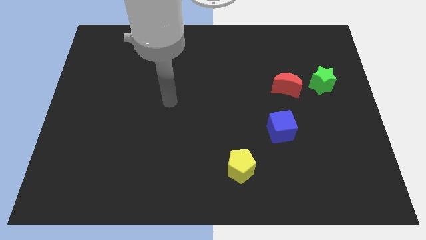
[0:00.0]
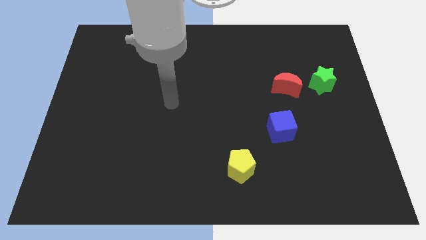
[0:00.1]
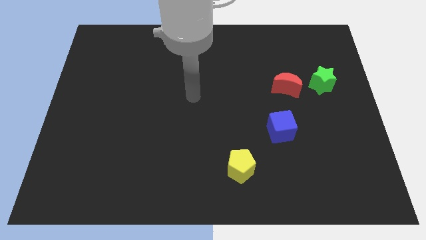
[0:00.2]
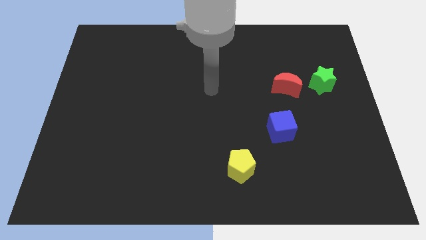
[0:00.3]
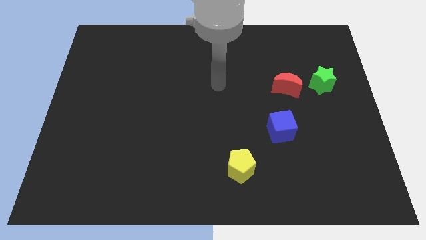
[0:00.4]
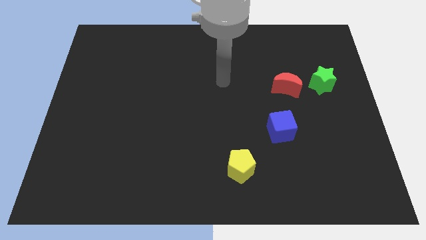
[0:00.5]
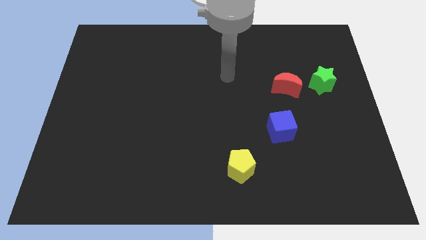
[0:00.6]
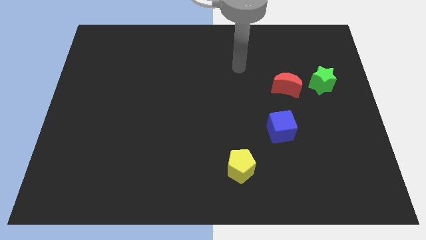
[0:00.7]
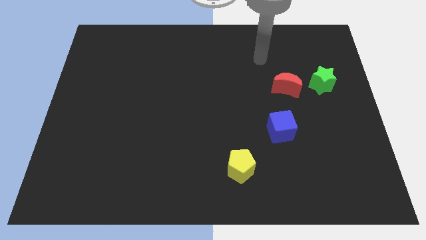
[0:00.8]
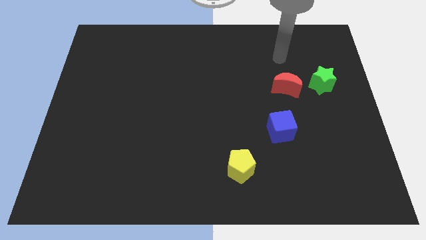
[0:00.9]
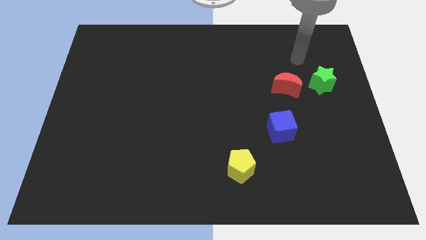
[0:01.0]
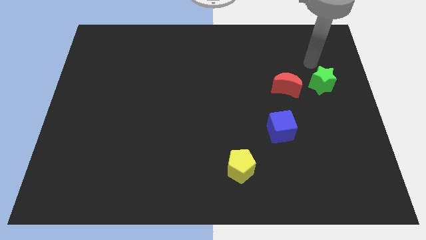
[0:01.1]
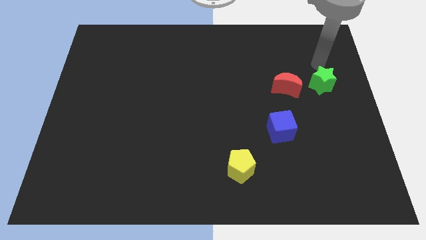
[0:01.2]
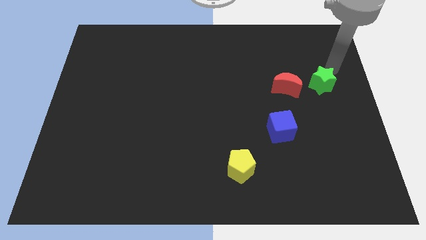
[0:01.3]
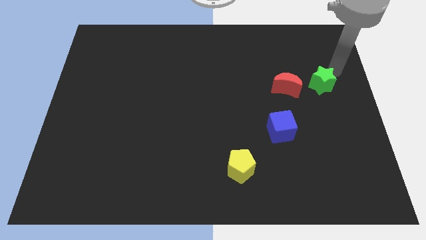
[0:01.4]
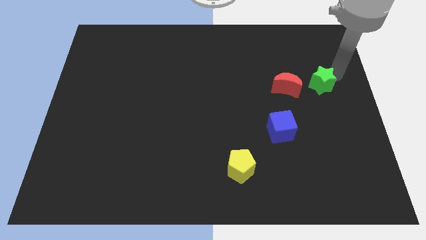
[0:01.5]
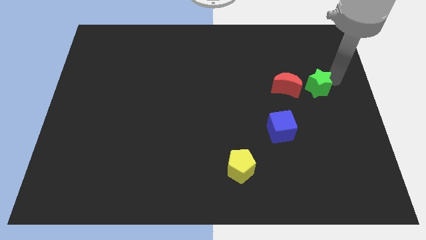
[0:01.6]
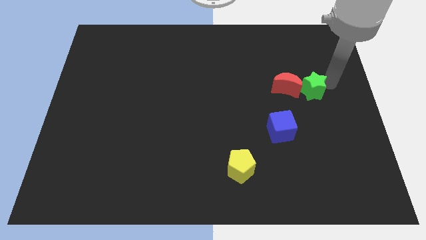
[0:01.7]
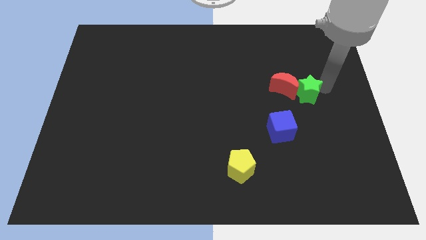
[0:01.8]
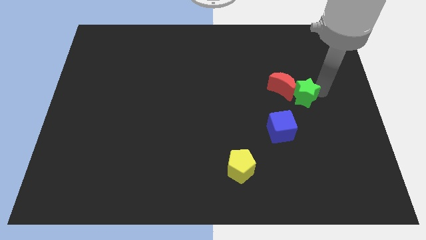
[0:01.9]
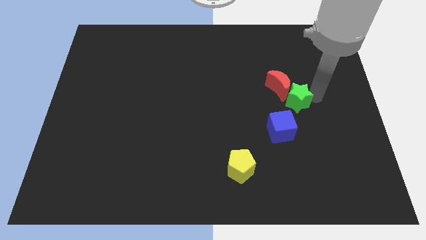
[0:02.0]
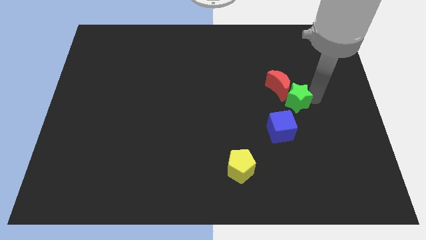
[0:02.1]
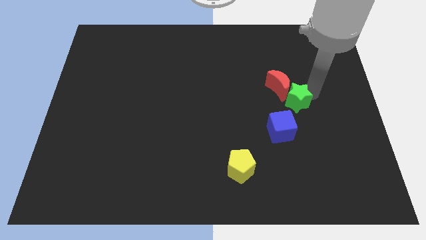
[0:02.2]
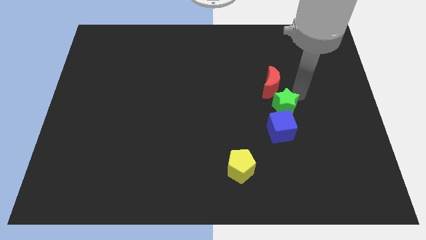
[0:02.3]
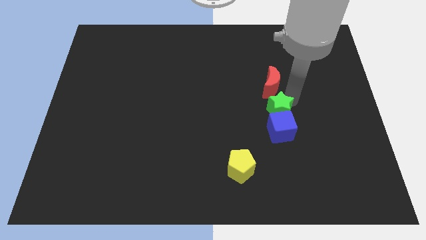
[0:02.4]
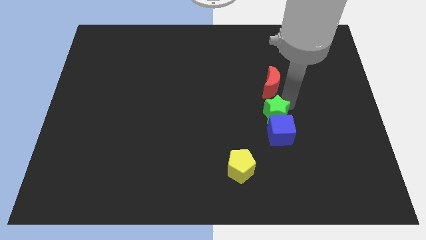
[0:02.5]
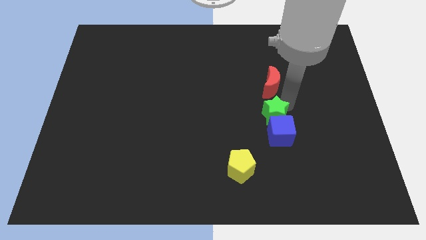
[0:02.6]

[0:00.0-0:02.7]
slide the green block towards the cube

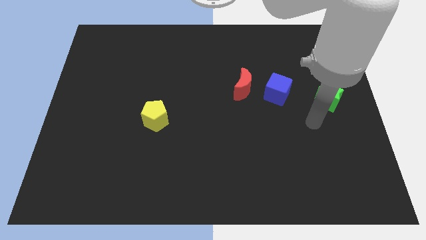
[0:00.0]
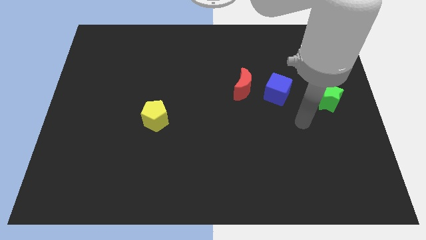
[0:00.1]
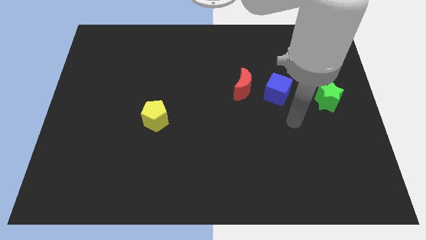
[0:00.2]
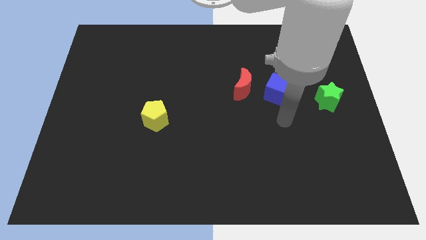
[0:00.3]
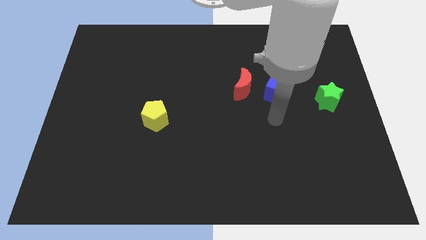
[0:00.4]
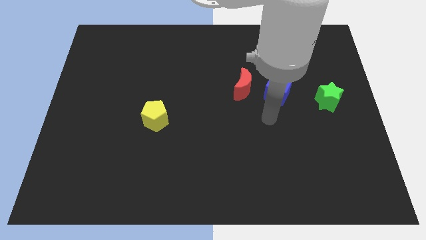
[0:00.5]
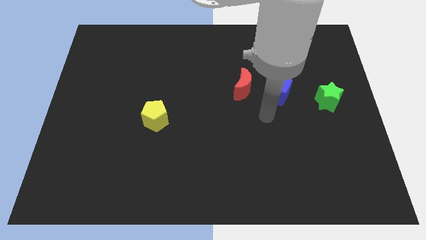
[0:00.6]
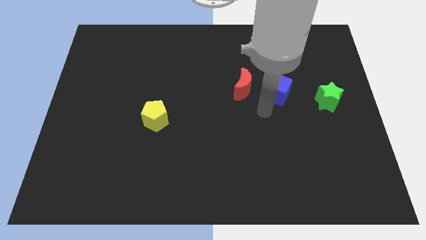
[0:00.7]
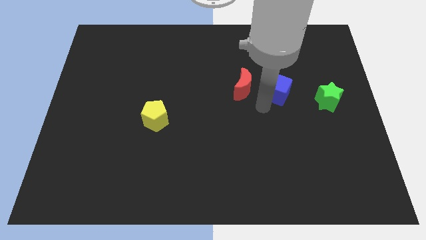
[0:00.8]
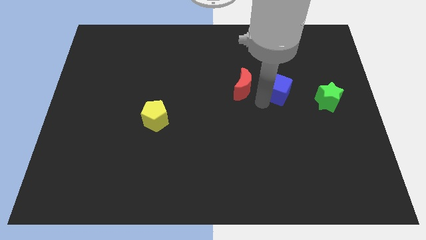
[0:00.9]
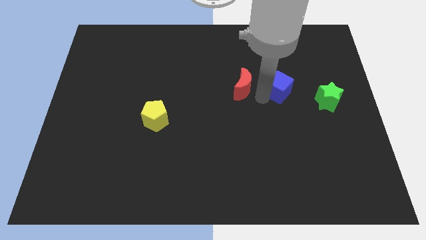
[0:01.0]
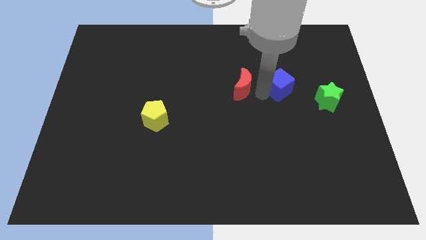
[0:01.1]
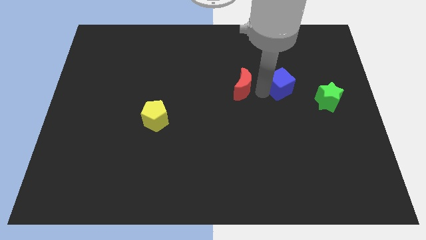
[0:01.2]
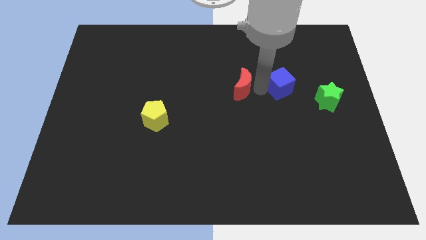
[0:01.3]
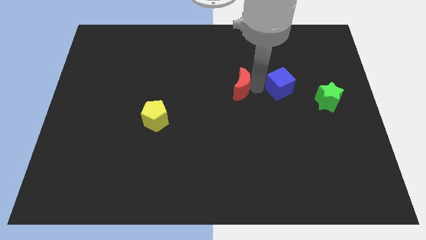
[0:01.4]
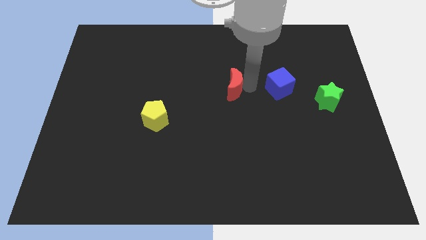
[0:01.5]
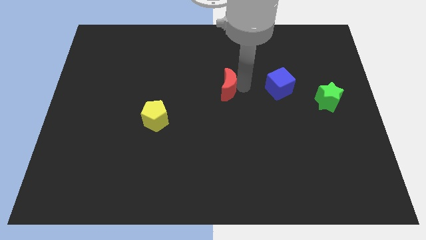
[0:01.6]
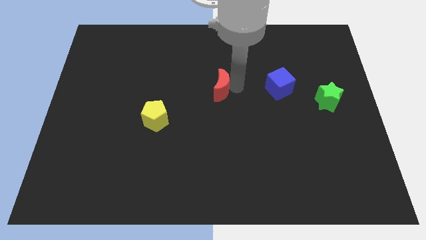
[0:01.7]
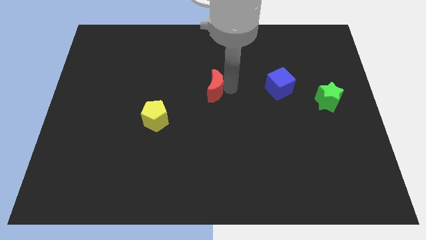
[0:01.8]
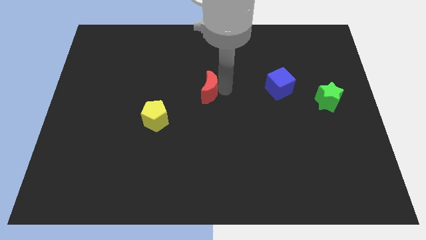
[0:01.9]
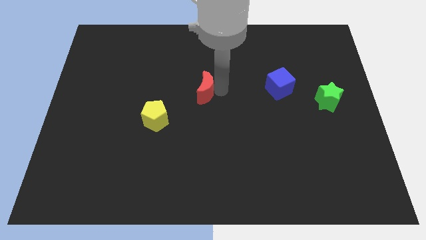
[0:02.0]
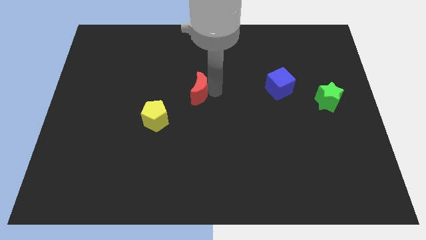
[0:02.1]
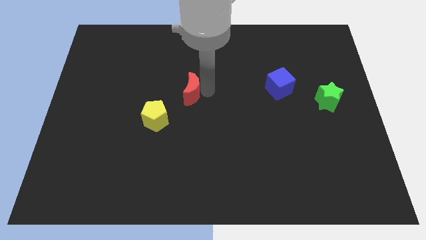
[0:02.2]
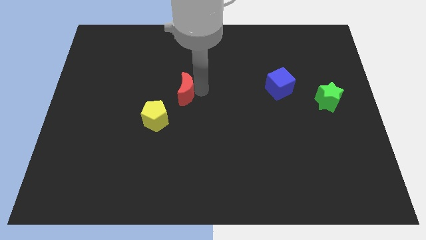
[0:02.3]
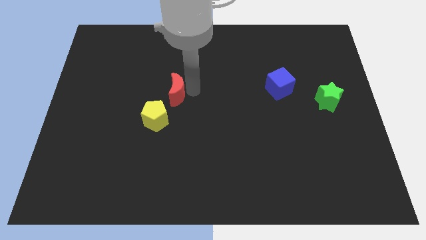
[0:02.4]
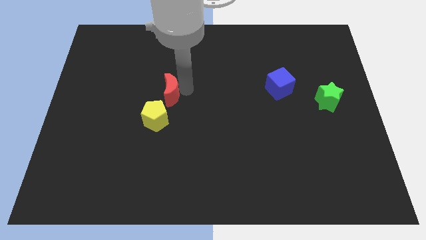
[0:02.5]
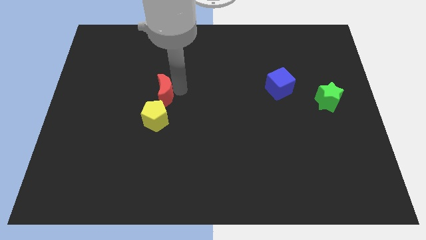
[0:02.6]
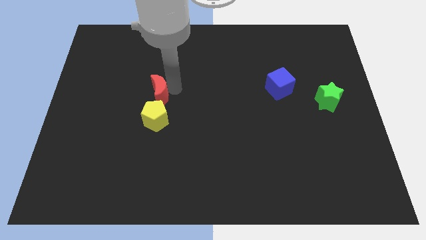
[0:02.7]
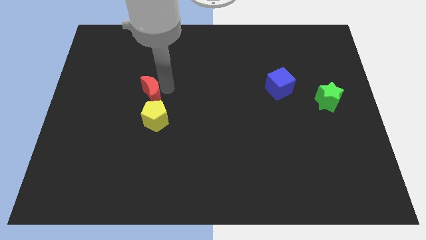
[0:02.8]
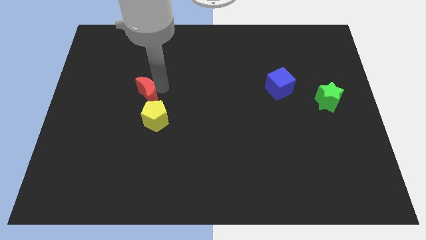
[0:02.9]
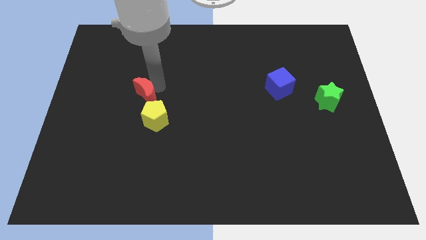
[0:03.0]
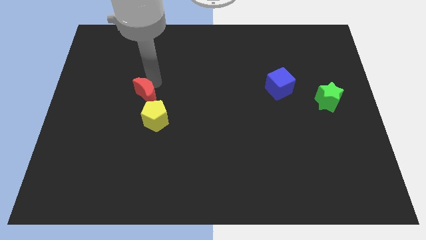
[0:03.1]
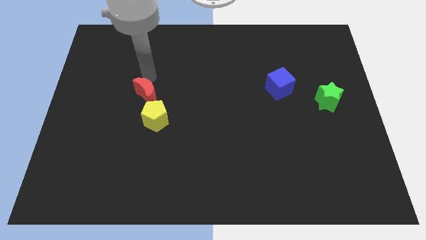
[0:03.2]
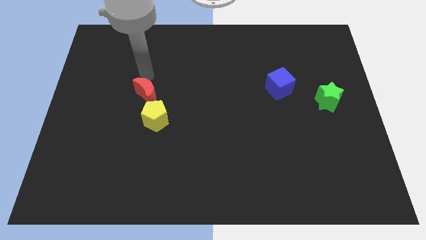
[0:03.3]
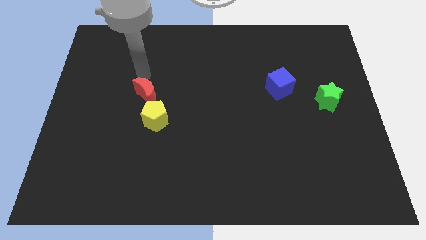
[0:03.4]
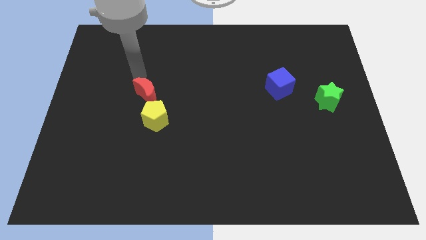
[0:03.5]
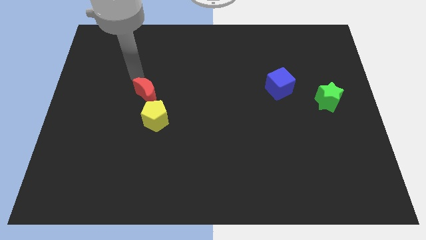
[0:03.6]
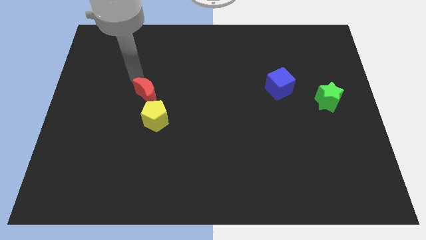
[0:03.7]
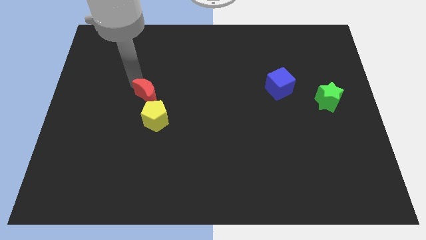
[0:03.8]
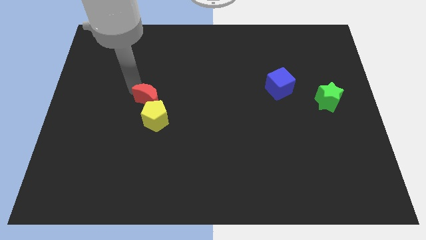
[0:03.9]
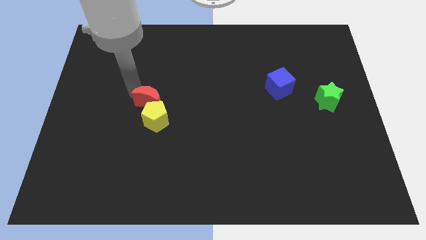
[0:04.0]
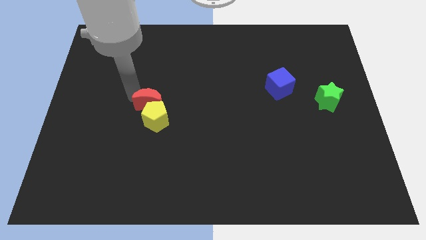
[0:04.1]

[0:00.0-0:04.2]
slide the red block towards the yellow block

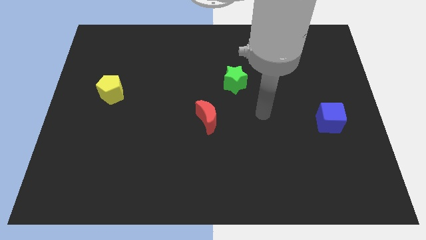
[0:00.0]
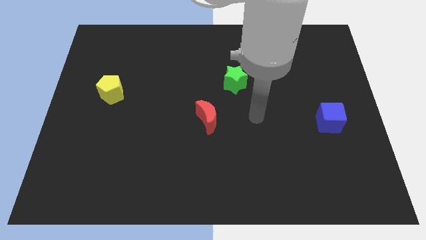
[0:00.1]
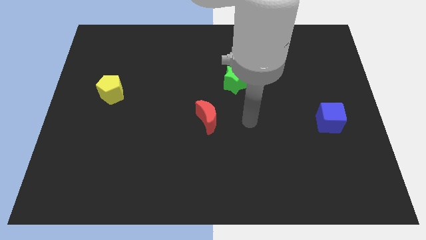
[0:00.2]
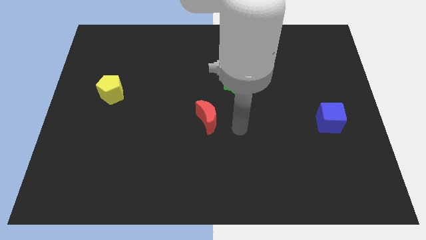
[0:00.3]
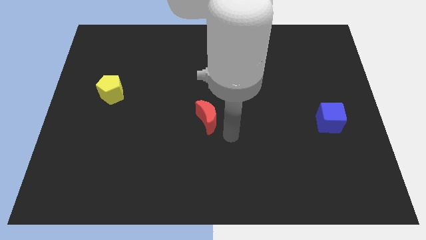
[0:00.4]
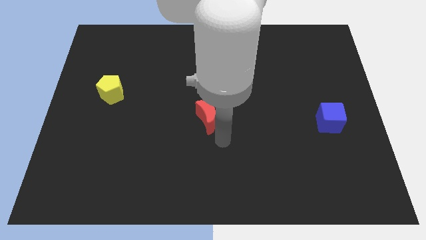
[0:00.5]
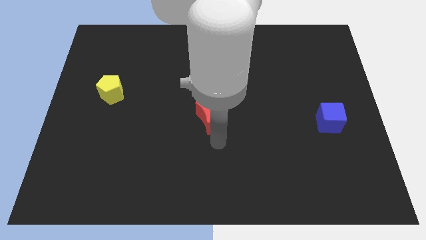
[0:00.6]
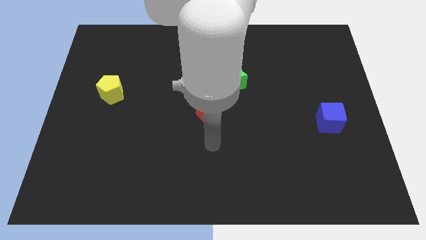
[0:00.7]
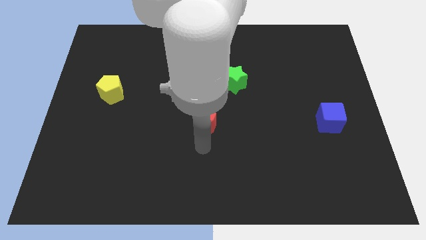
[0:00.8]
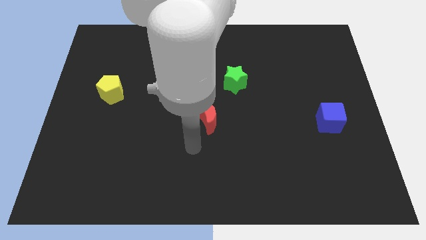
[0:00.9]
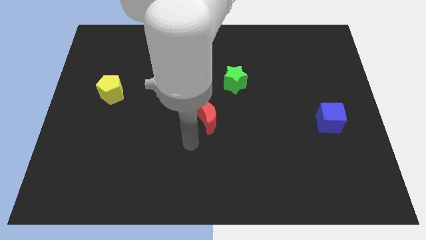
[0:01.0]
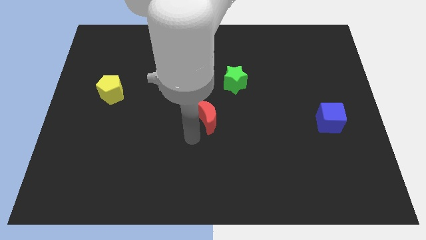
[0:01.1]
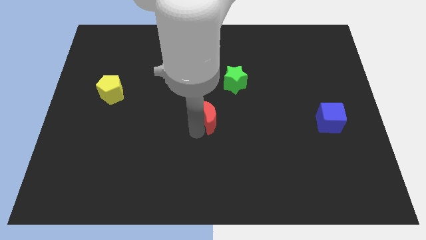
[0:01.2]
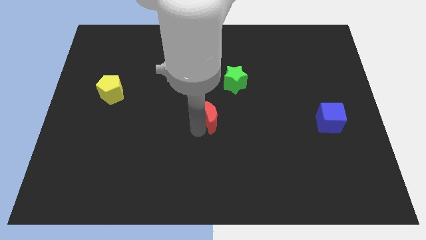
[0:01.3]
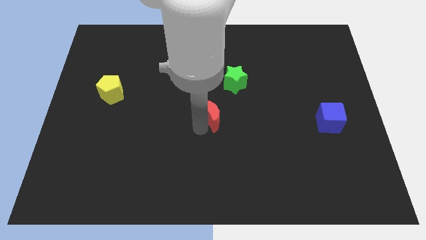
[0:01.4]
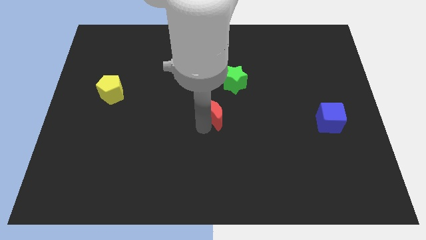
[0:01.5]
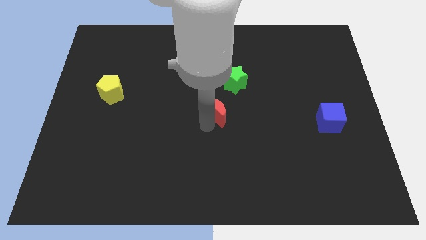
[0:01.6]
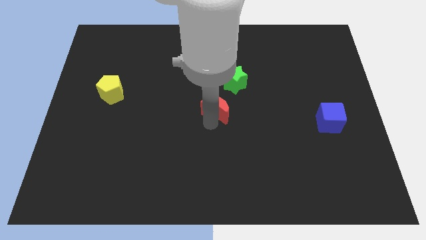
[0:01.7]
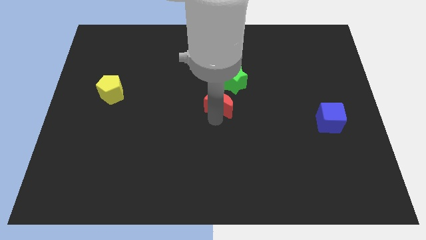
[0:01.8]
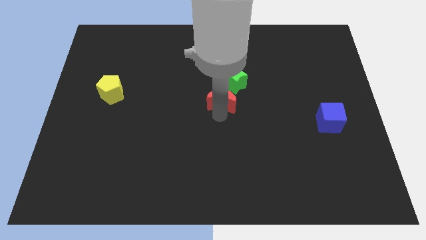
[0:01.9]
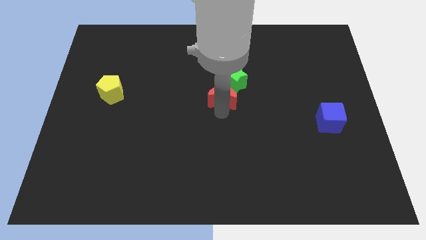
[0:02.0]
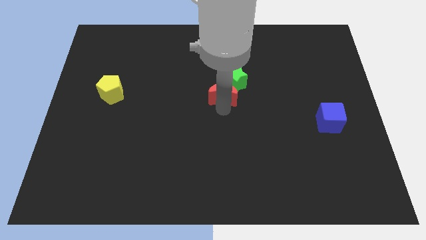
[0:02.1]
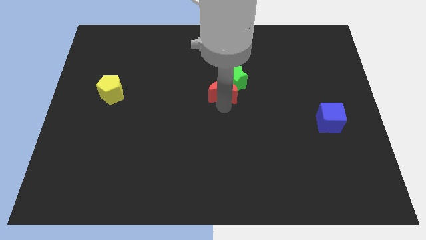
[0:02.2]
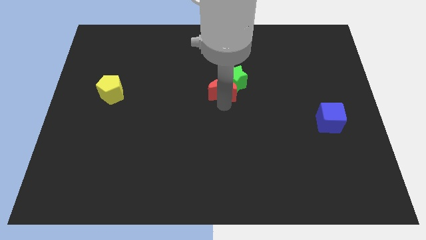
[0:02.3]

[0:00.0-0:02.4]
move the moon close to the star
